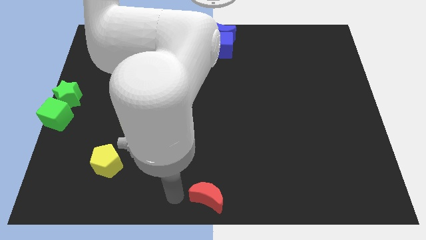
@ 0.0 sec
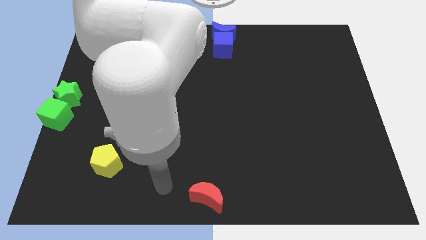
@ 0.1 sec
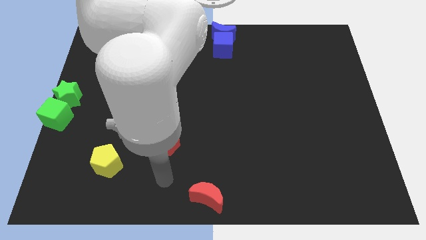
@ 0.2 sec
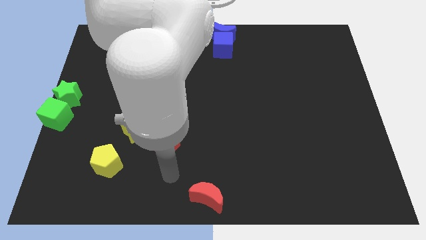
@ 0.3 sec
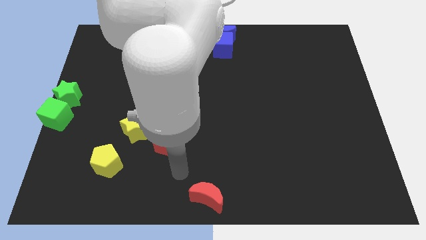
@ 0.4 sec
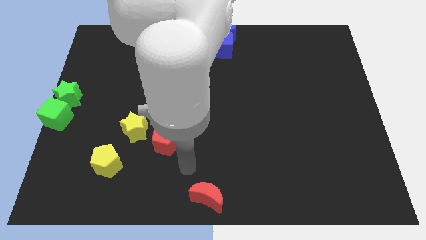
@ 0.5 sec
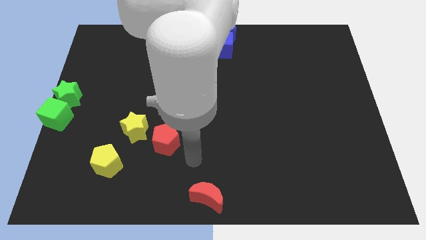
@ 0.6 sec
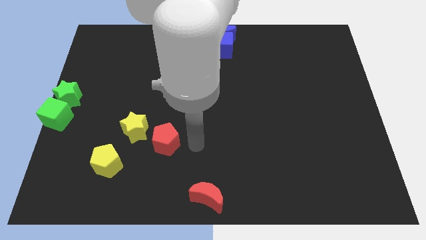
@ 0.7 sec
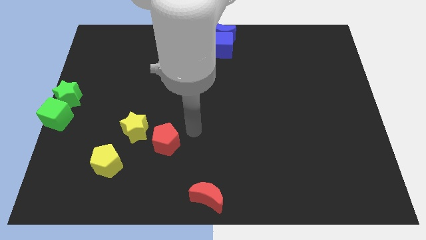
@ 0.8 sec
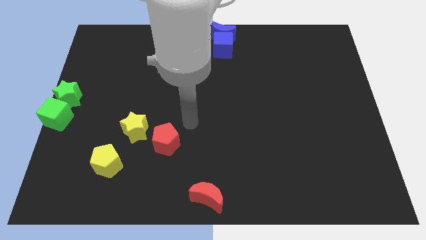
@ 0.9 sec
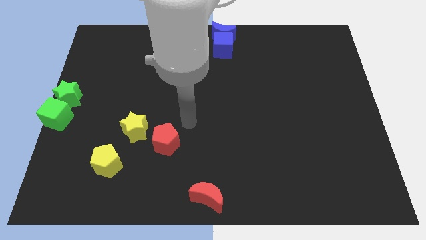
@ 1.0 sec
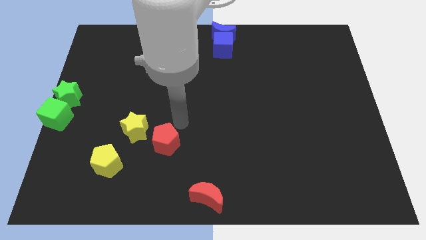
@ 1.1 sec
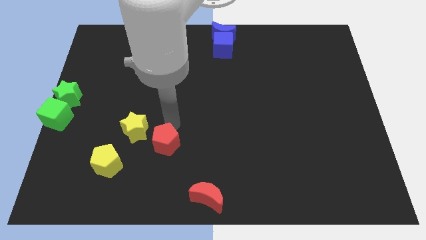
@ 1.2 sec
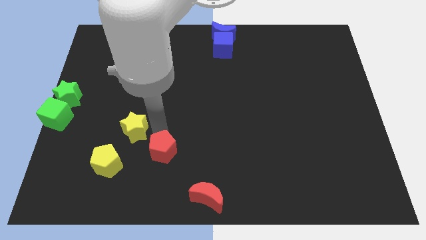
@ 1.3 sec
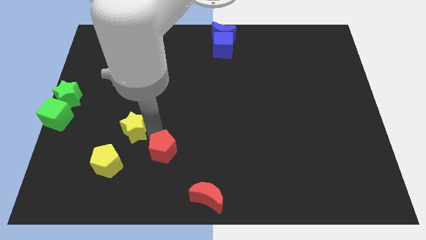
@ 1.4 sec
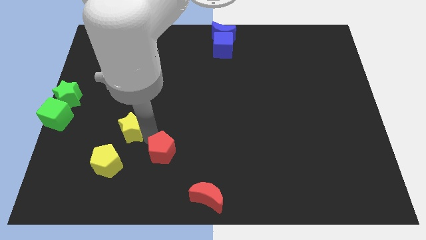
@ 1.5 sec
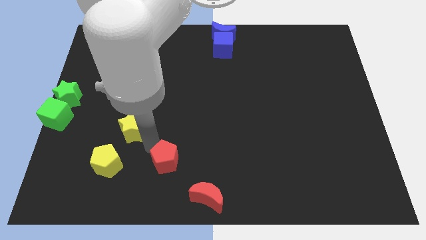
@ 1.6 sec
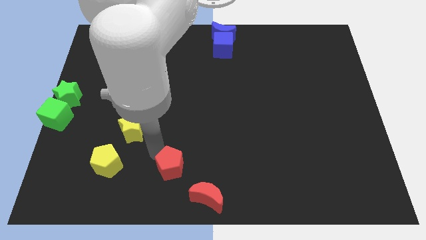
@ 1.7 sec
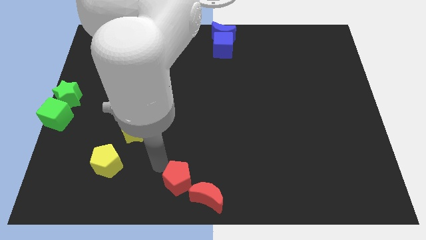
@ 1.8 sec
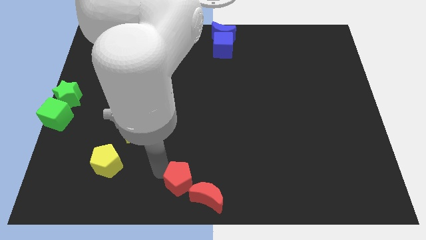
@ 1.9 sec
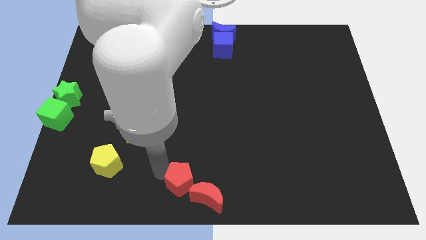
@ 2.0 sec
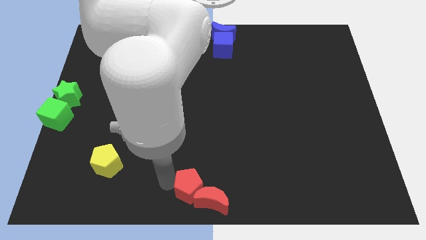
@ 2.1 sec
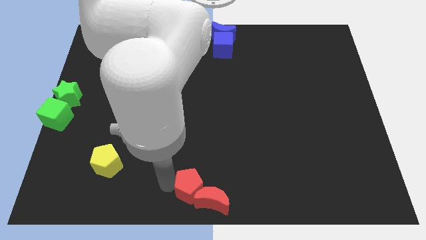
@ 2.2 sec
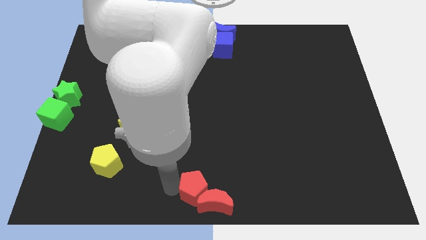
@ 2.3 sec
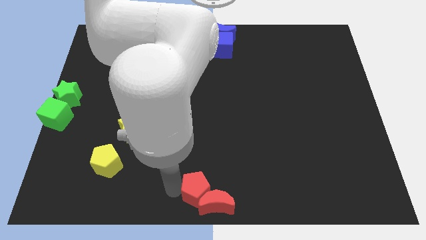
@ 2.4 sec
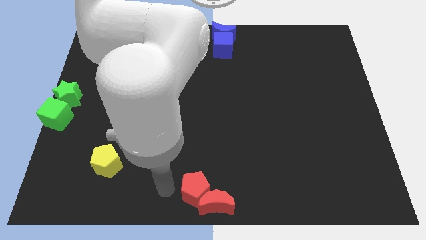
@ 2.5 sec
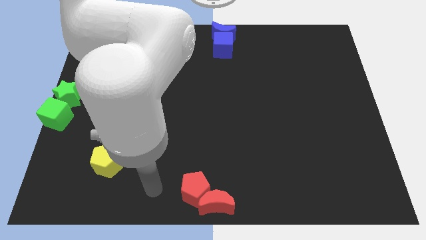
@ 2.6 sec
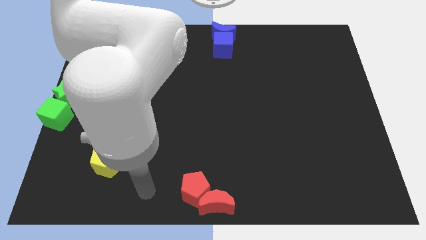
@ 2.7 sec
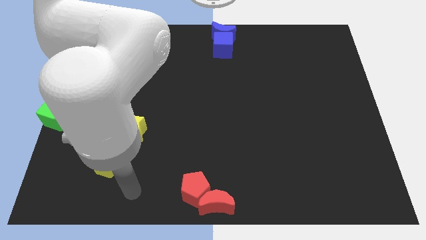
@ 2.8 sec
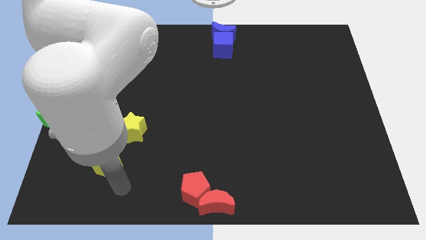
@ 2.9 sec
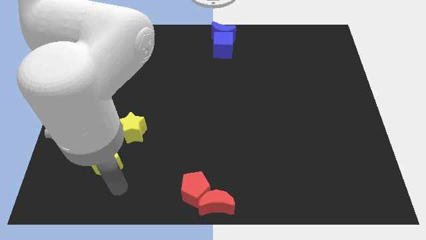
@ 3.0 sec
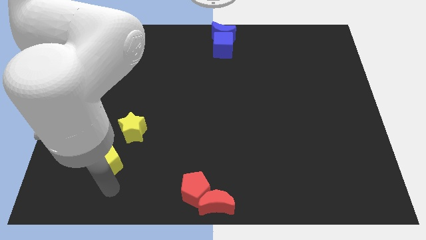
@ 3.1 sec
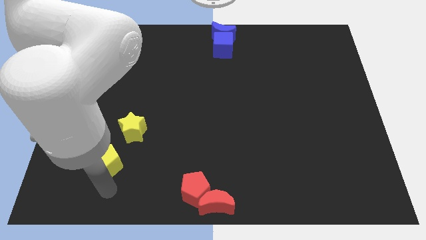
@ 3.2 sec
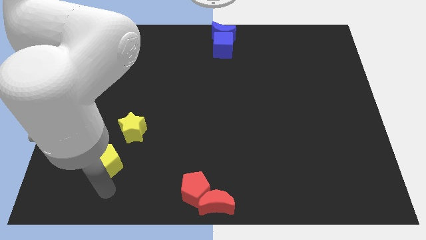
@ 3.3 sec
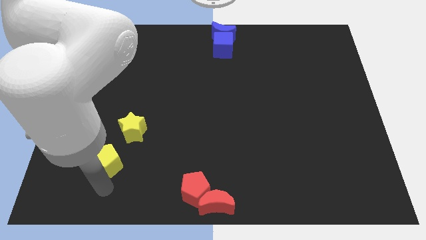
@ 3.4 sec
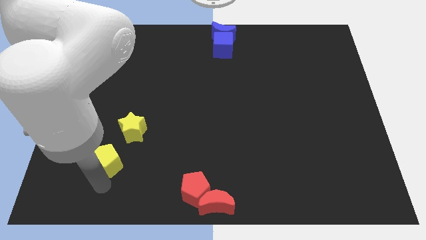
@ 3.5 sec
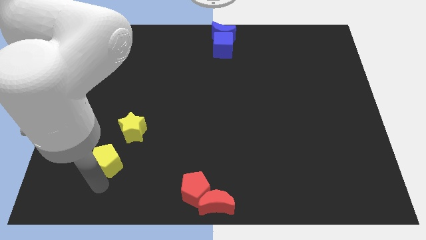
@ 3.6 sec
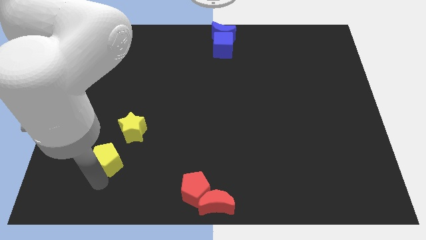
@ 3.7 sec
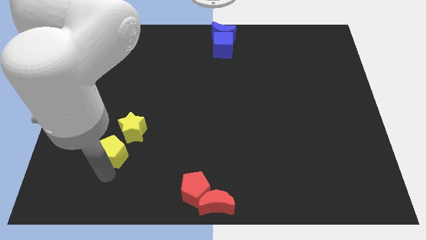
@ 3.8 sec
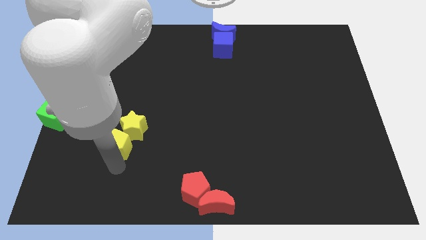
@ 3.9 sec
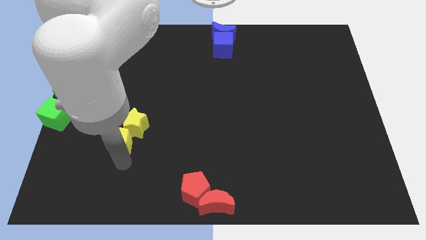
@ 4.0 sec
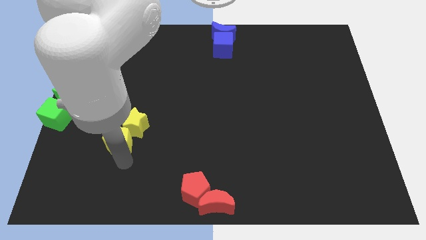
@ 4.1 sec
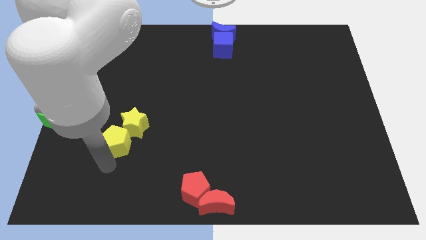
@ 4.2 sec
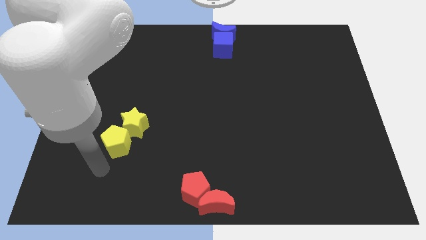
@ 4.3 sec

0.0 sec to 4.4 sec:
drag the red pentagon into the left side of the red crescent

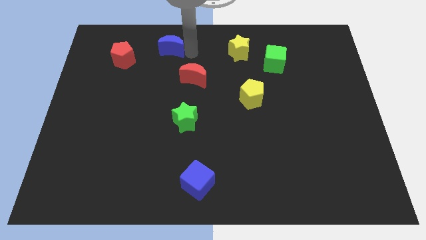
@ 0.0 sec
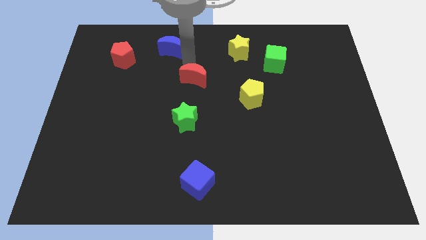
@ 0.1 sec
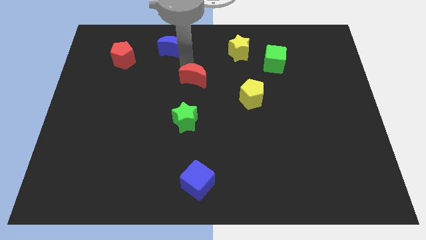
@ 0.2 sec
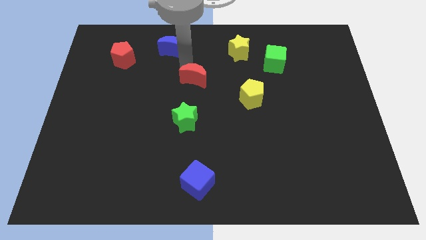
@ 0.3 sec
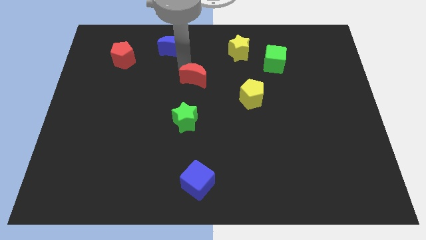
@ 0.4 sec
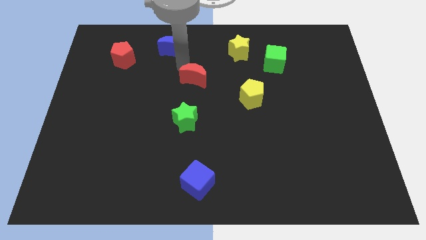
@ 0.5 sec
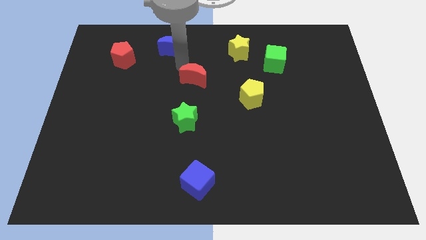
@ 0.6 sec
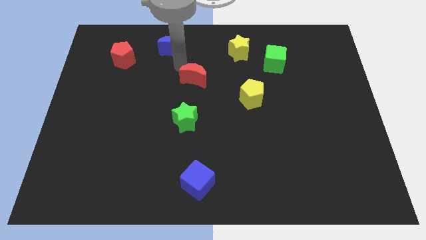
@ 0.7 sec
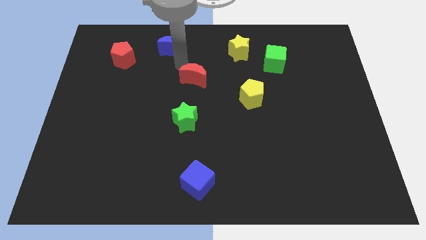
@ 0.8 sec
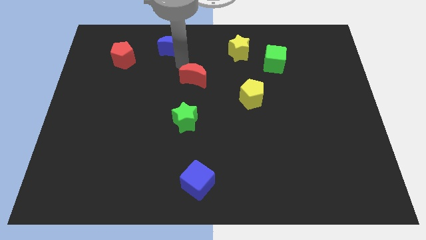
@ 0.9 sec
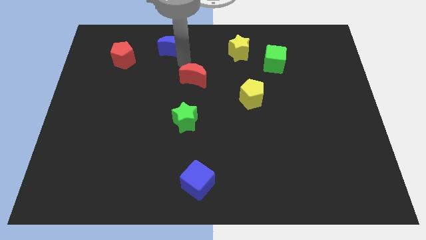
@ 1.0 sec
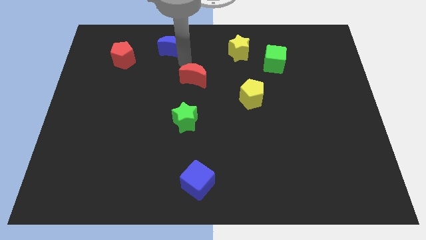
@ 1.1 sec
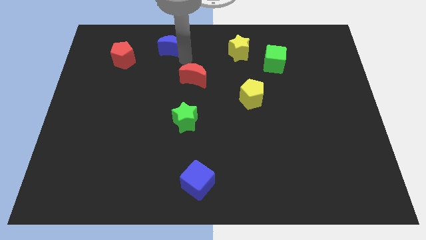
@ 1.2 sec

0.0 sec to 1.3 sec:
push the blue crescent to the right side of the red pentagon

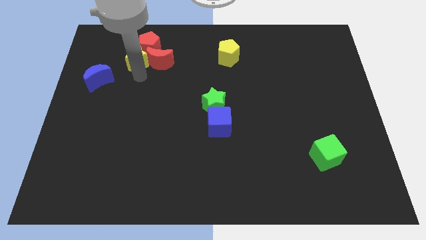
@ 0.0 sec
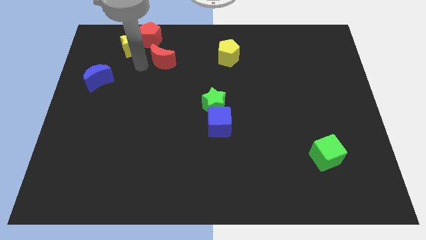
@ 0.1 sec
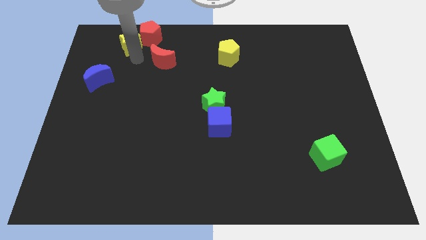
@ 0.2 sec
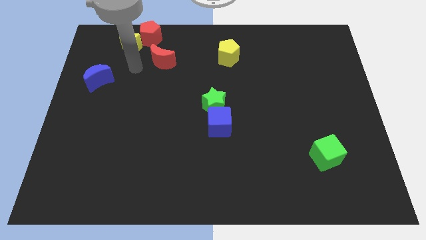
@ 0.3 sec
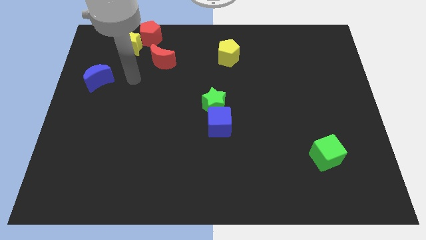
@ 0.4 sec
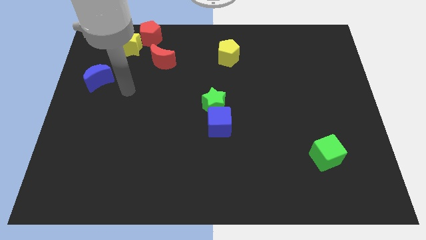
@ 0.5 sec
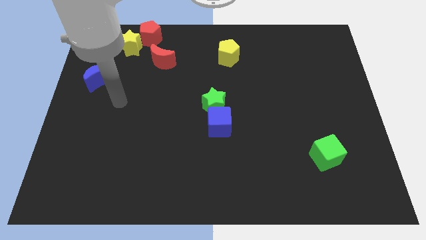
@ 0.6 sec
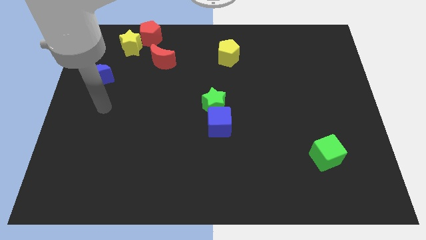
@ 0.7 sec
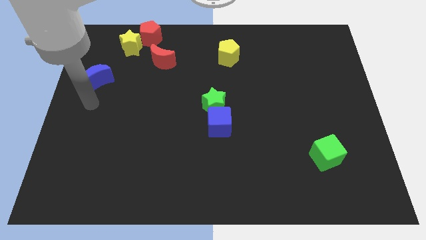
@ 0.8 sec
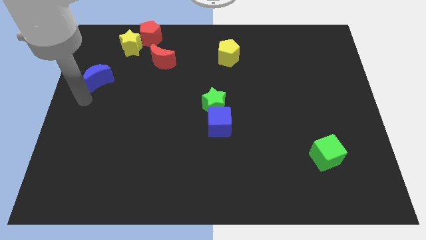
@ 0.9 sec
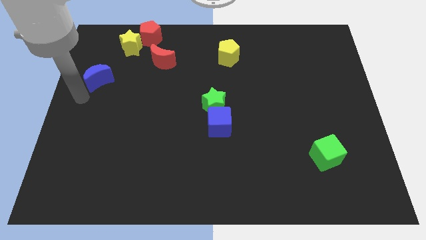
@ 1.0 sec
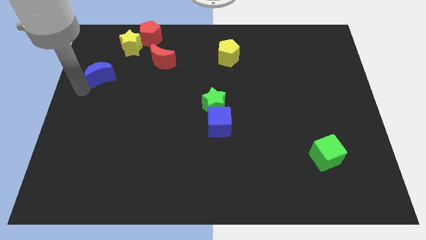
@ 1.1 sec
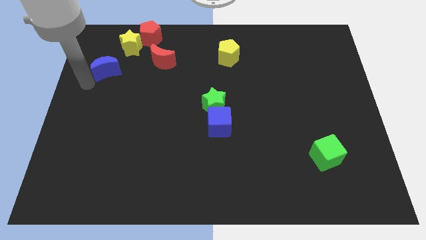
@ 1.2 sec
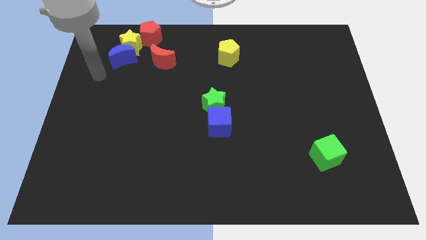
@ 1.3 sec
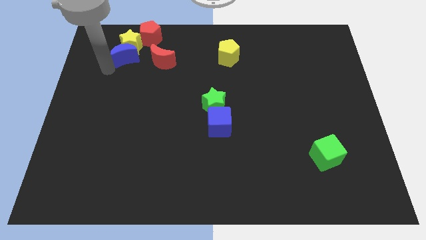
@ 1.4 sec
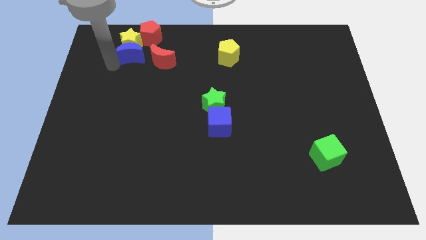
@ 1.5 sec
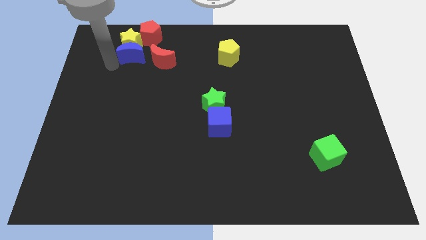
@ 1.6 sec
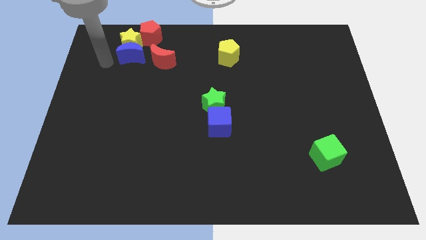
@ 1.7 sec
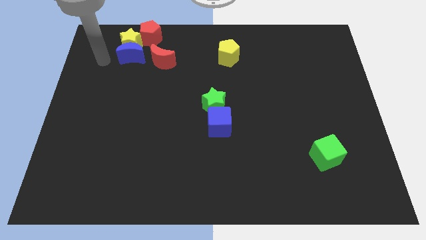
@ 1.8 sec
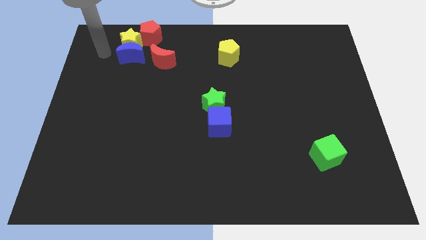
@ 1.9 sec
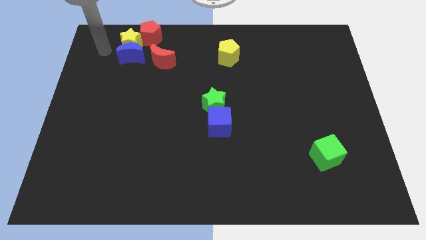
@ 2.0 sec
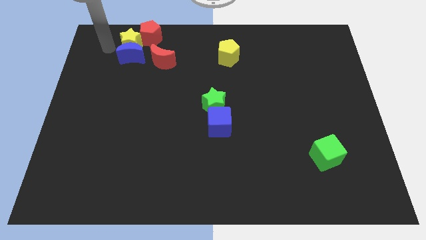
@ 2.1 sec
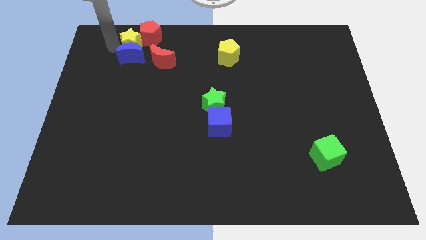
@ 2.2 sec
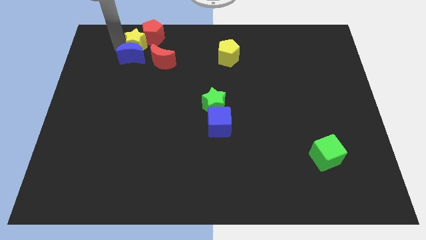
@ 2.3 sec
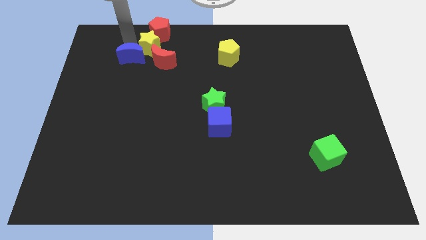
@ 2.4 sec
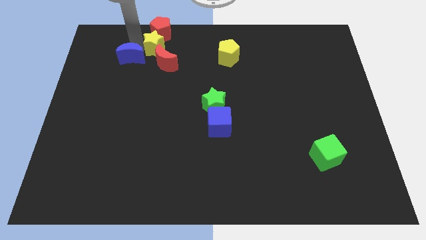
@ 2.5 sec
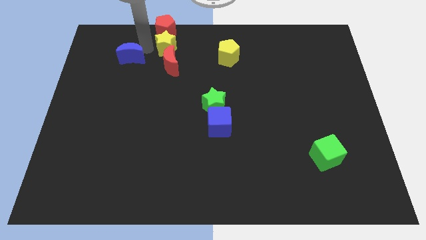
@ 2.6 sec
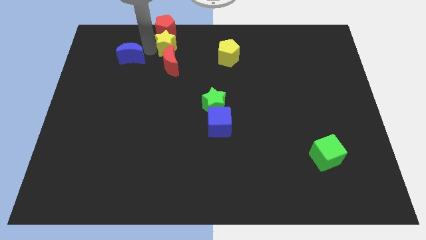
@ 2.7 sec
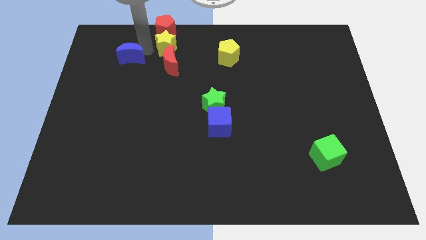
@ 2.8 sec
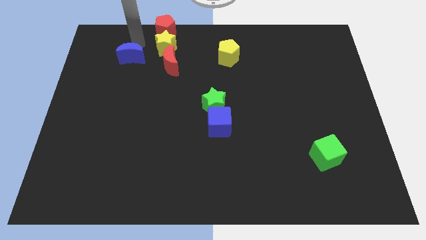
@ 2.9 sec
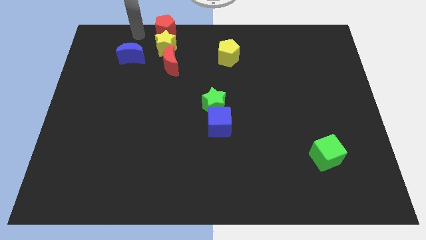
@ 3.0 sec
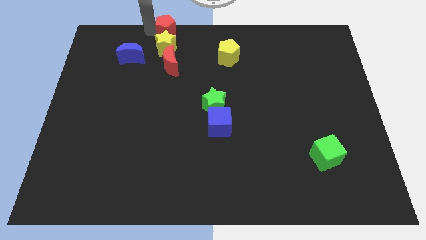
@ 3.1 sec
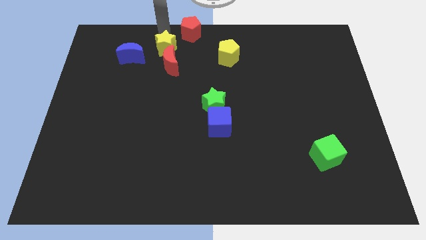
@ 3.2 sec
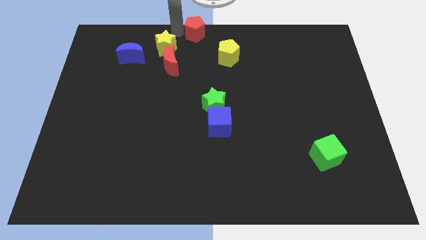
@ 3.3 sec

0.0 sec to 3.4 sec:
push the yellow star towards the red pentagon
